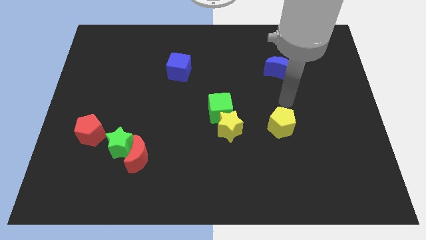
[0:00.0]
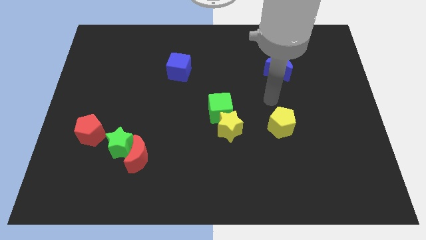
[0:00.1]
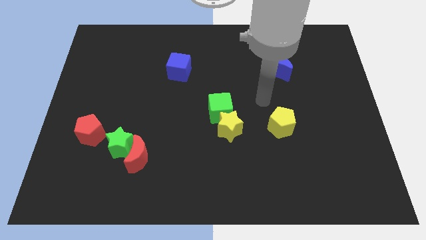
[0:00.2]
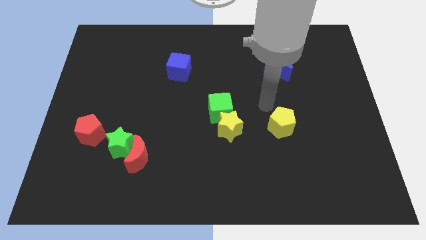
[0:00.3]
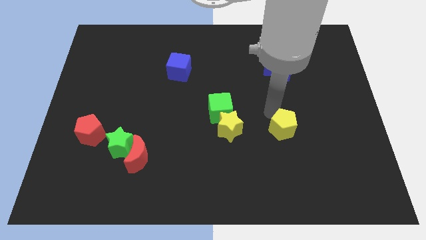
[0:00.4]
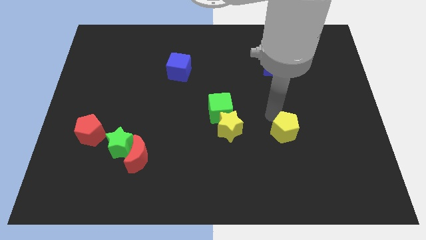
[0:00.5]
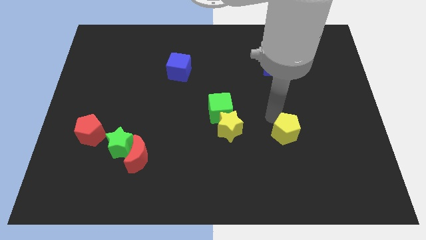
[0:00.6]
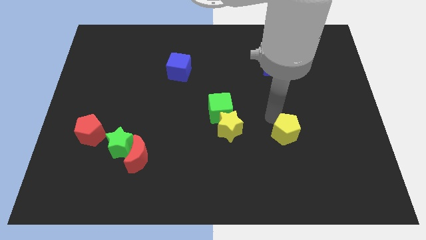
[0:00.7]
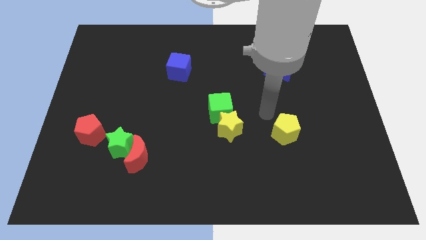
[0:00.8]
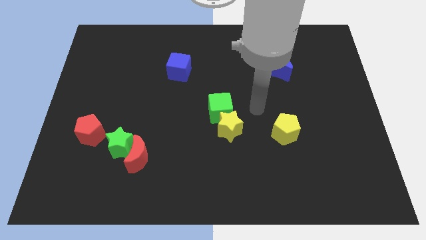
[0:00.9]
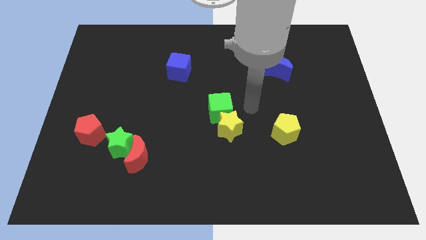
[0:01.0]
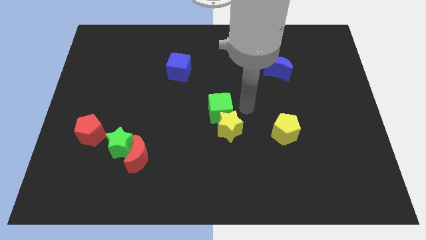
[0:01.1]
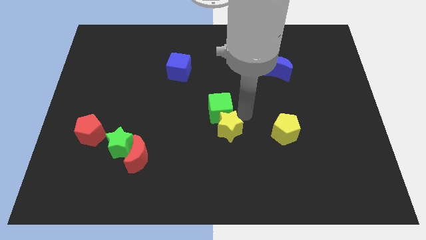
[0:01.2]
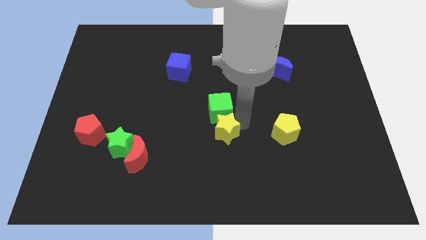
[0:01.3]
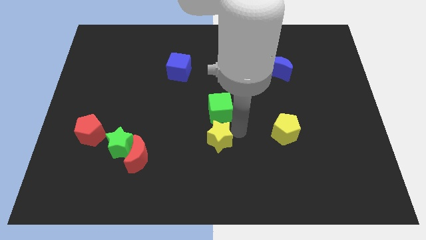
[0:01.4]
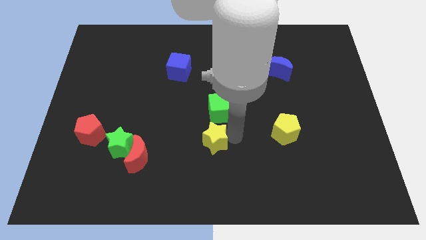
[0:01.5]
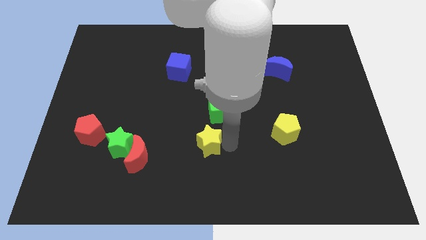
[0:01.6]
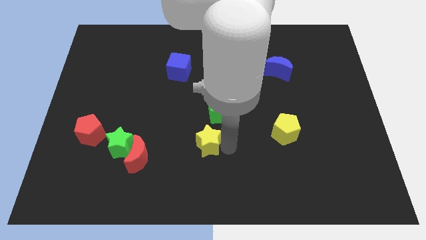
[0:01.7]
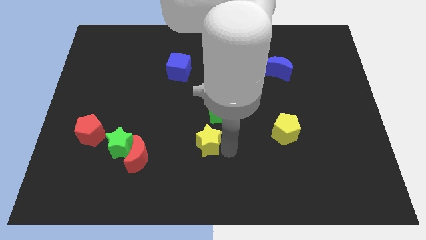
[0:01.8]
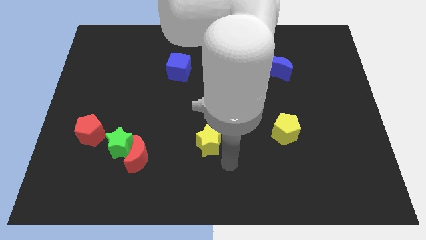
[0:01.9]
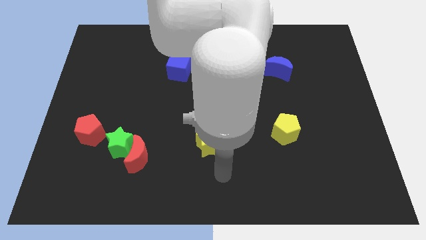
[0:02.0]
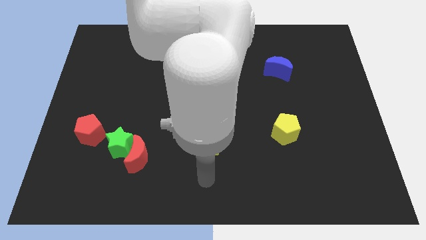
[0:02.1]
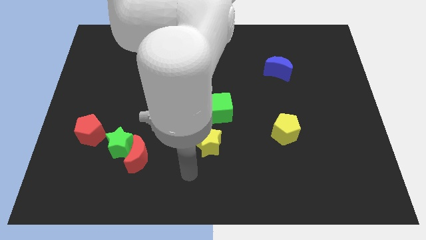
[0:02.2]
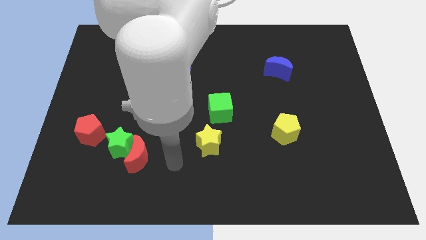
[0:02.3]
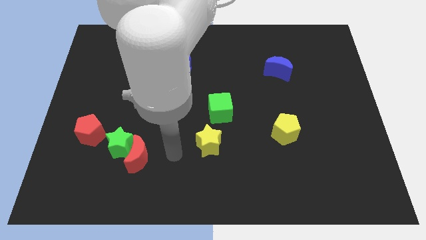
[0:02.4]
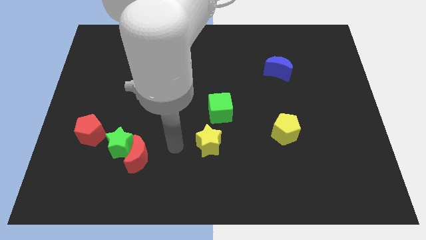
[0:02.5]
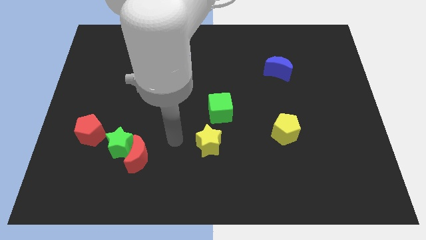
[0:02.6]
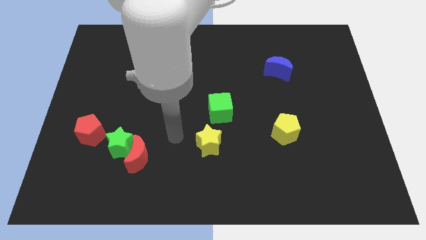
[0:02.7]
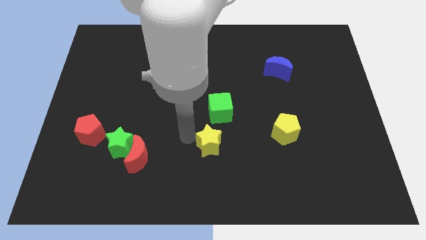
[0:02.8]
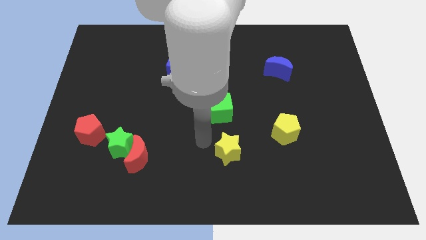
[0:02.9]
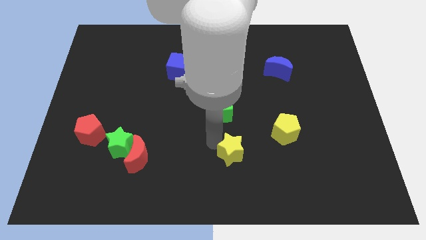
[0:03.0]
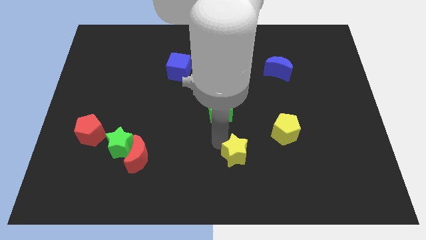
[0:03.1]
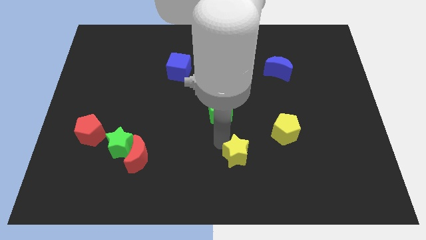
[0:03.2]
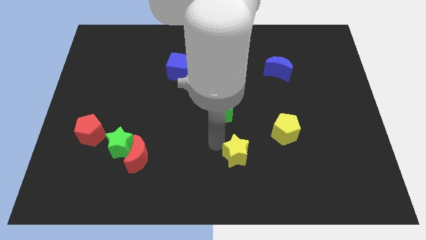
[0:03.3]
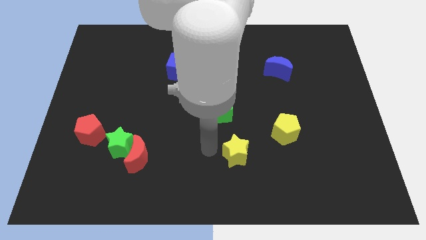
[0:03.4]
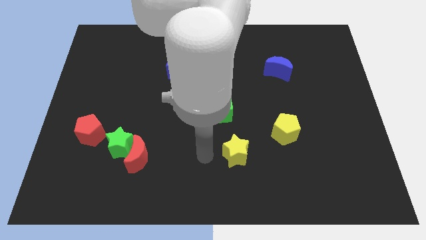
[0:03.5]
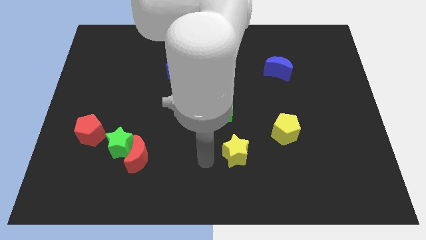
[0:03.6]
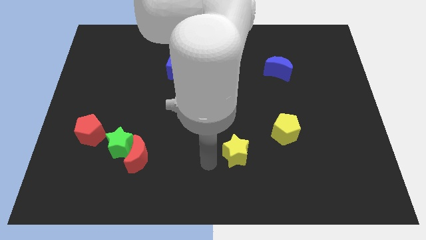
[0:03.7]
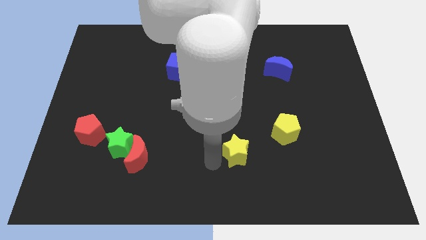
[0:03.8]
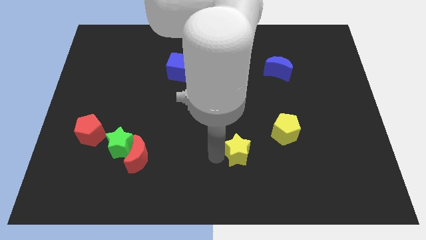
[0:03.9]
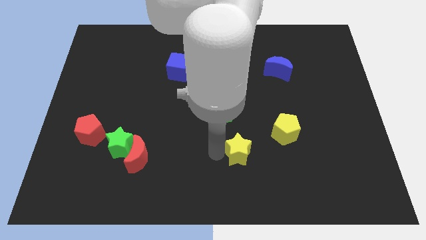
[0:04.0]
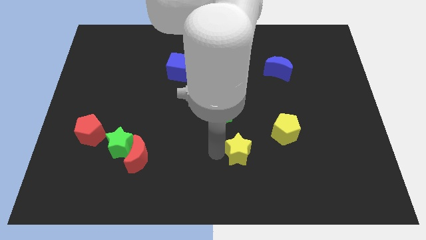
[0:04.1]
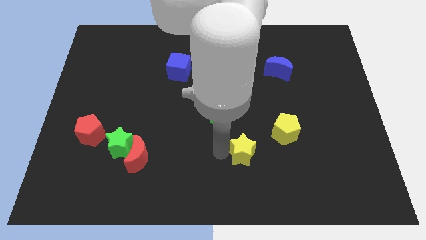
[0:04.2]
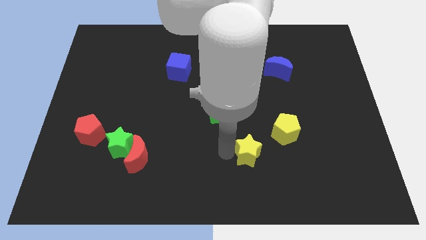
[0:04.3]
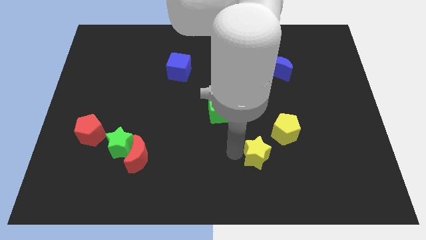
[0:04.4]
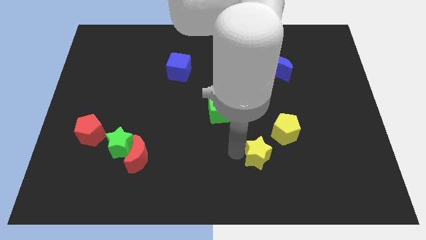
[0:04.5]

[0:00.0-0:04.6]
place the yellow pentagon at the bottom left of the yellow pentagon

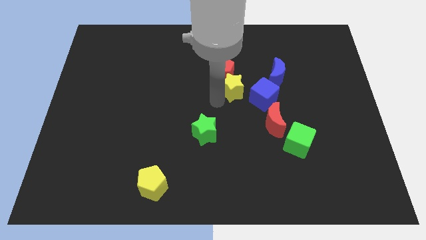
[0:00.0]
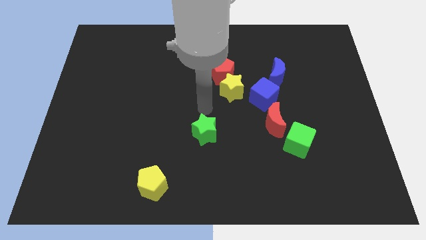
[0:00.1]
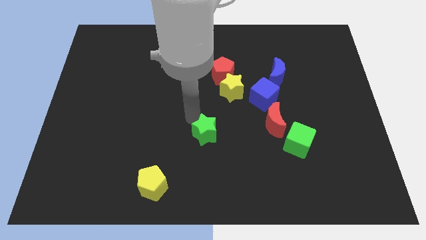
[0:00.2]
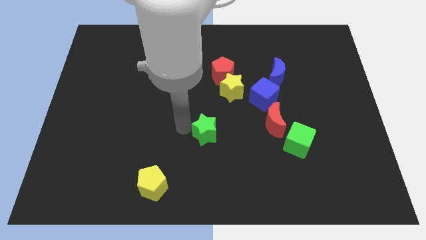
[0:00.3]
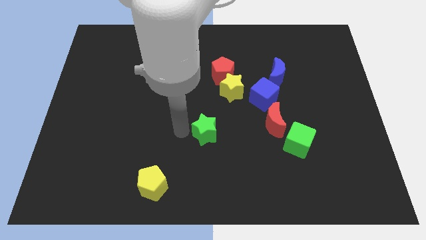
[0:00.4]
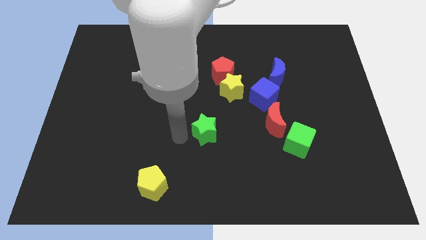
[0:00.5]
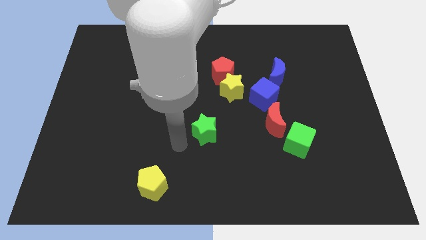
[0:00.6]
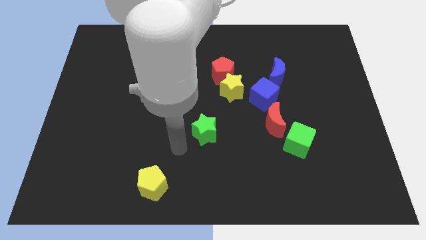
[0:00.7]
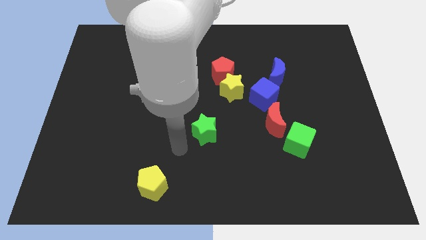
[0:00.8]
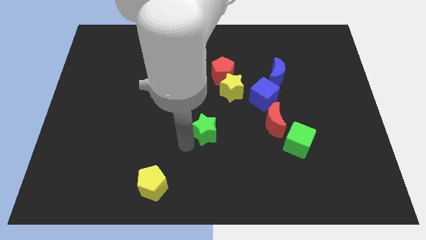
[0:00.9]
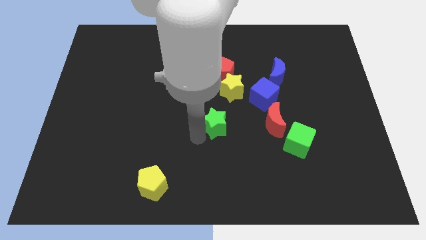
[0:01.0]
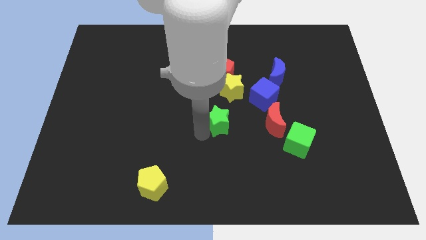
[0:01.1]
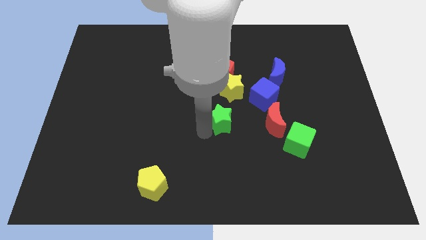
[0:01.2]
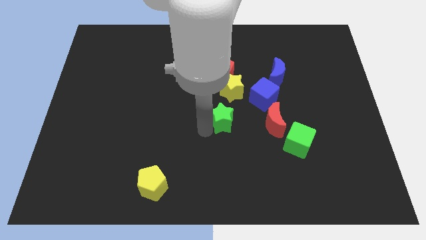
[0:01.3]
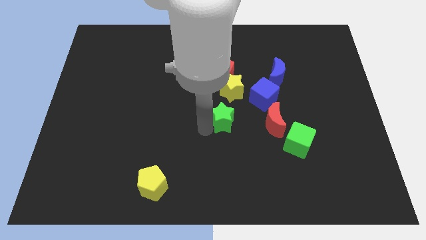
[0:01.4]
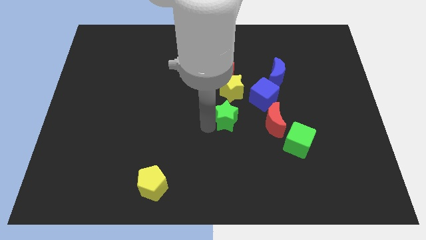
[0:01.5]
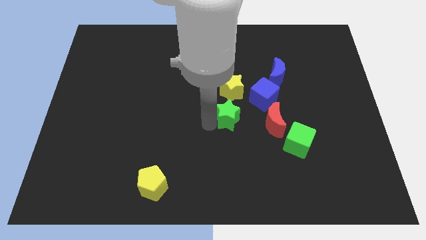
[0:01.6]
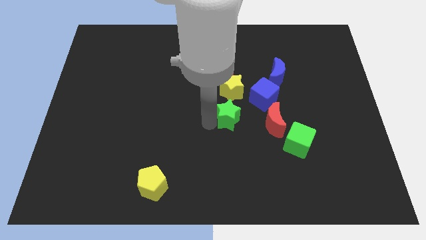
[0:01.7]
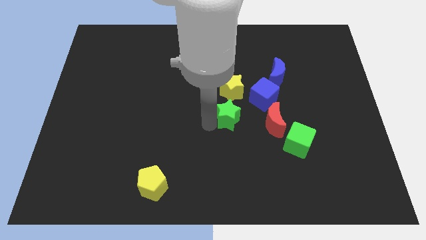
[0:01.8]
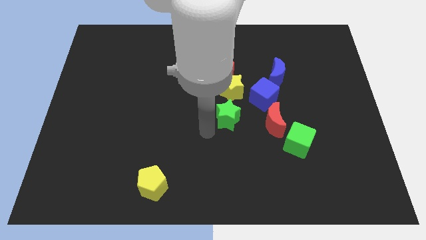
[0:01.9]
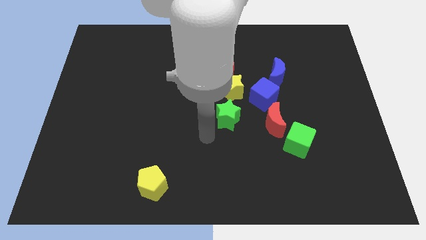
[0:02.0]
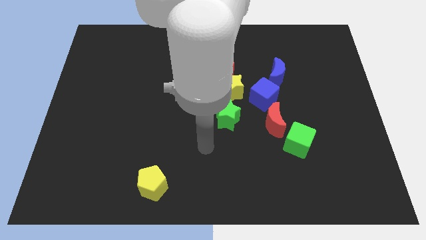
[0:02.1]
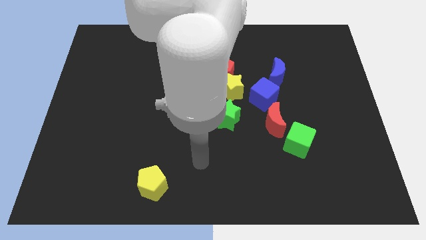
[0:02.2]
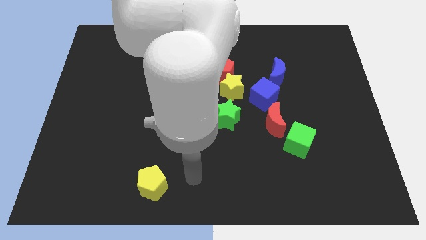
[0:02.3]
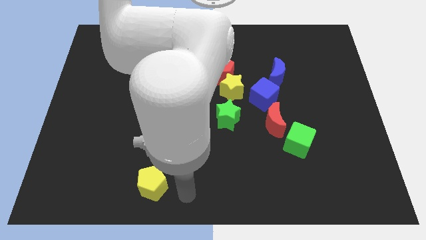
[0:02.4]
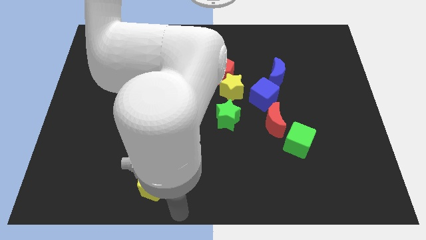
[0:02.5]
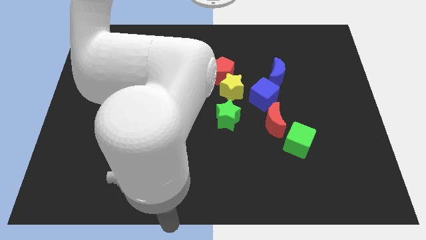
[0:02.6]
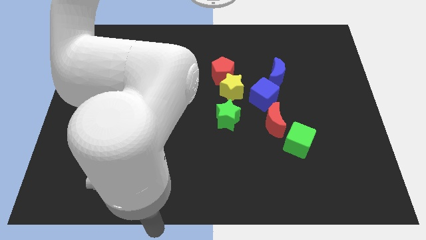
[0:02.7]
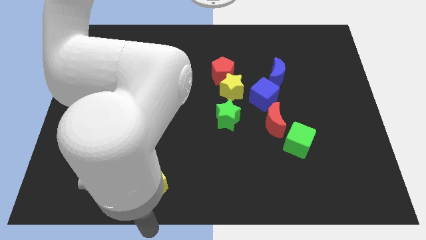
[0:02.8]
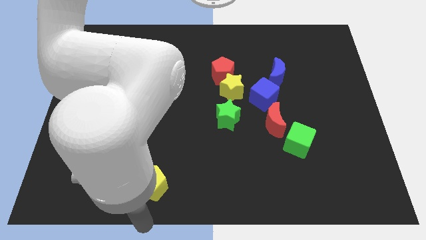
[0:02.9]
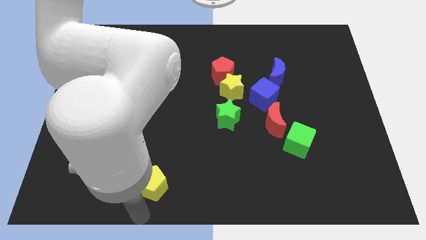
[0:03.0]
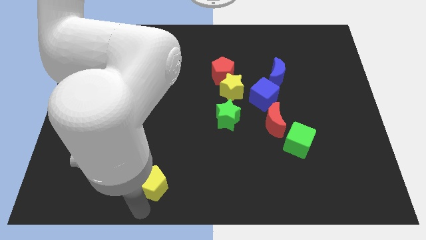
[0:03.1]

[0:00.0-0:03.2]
move green star towards the yellow star

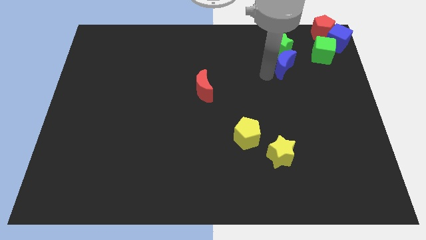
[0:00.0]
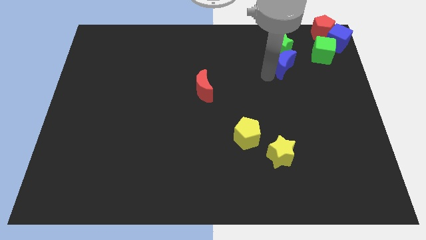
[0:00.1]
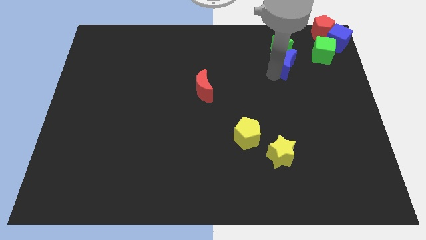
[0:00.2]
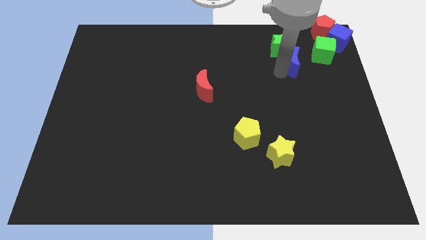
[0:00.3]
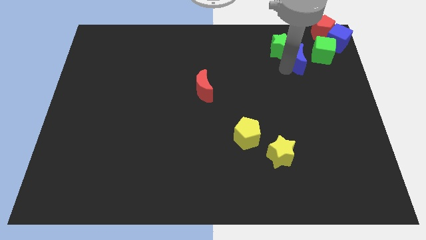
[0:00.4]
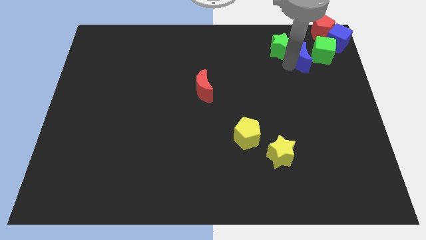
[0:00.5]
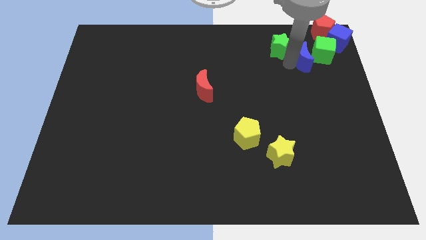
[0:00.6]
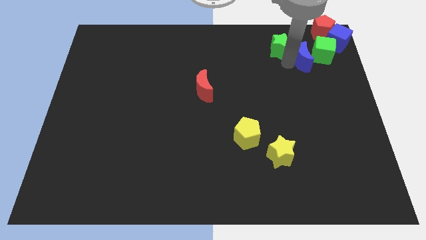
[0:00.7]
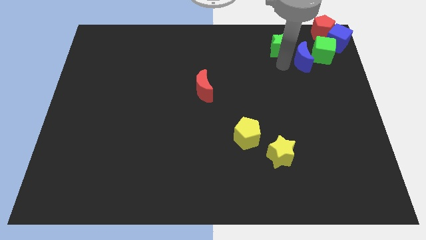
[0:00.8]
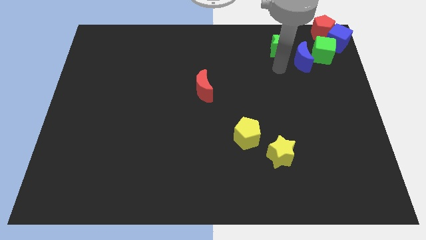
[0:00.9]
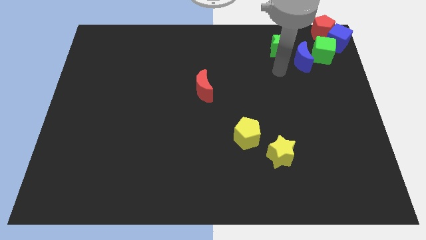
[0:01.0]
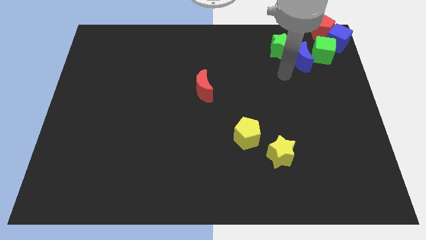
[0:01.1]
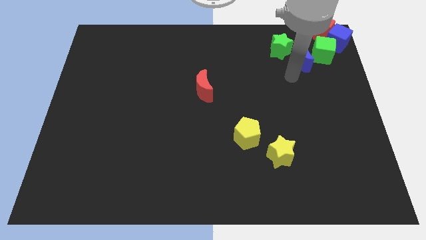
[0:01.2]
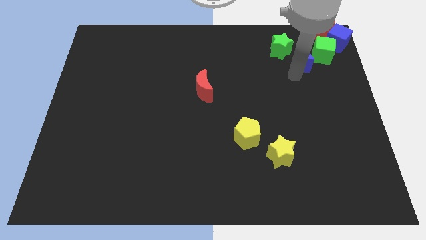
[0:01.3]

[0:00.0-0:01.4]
push the blue moon close to the green cube
